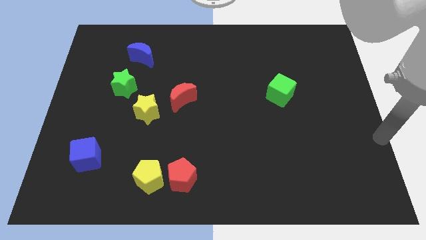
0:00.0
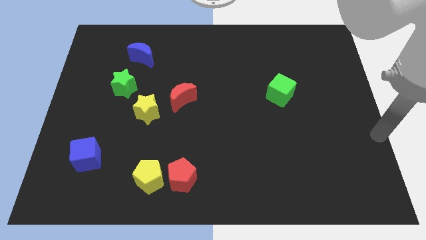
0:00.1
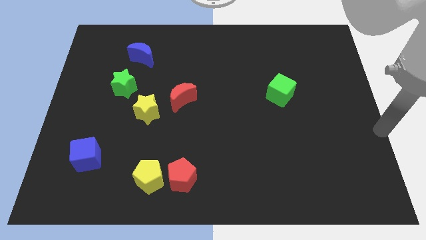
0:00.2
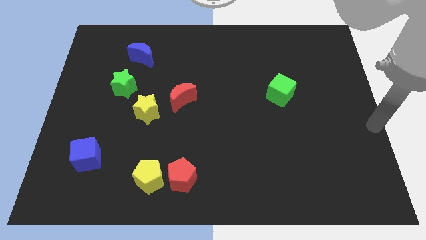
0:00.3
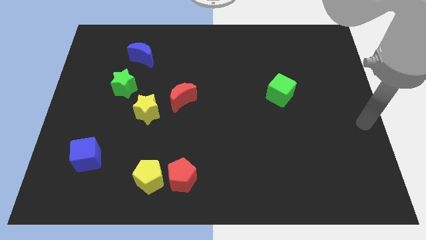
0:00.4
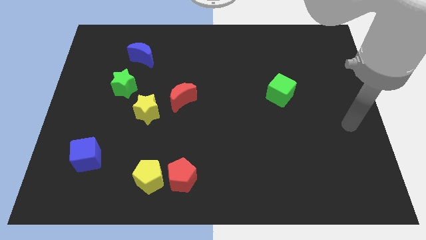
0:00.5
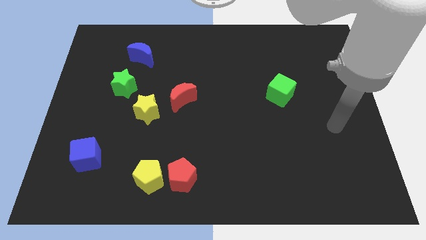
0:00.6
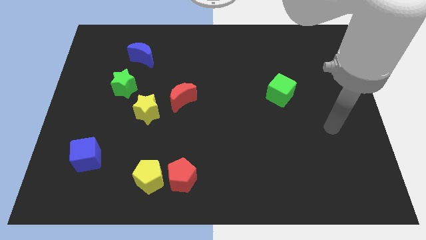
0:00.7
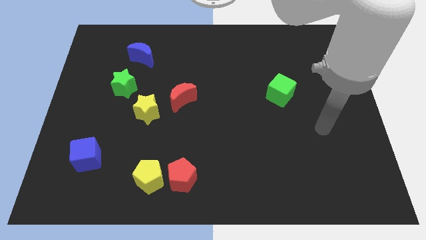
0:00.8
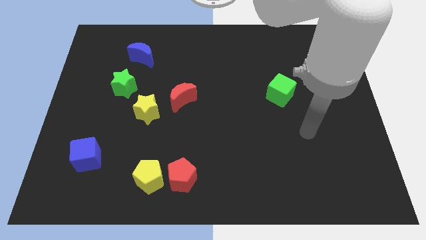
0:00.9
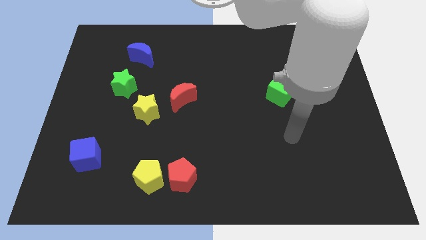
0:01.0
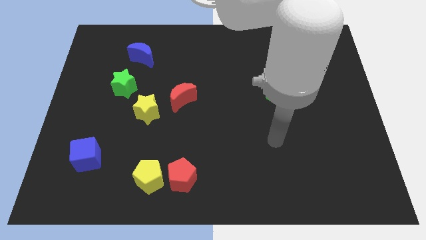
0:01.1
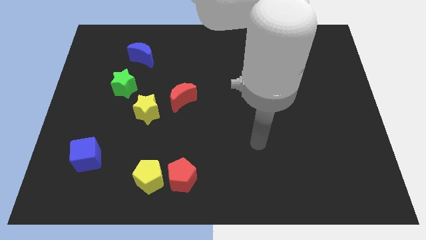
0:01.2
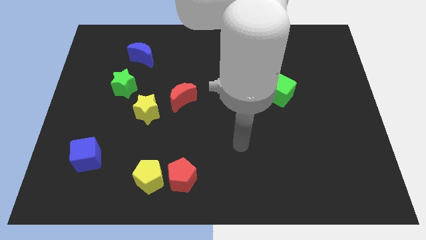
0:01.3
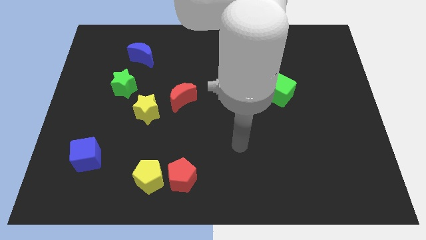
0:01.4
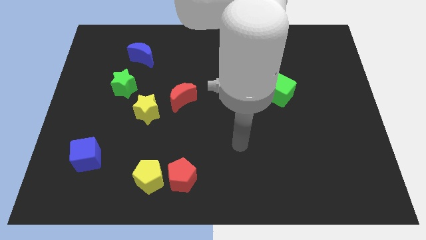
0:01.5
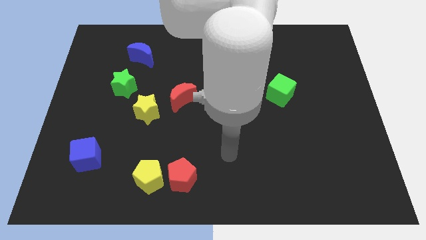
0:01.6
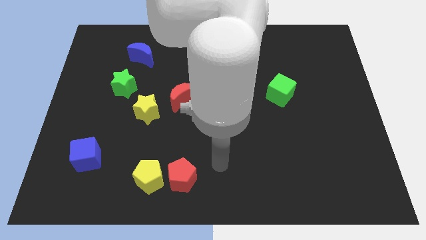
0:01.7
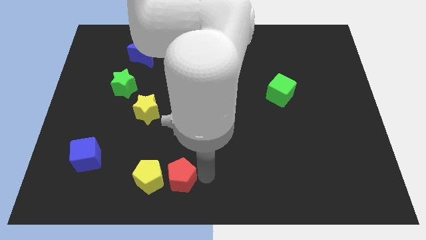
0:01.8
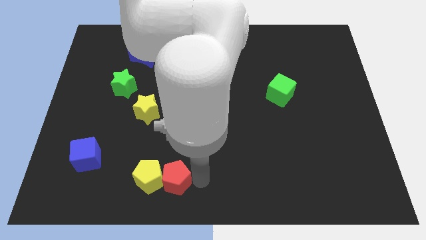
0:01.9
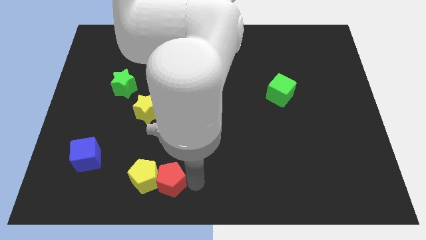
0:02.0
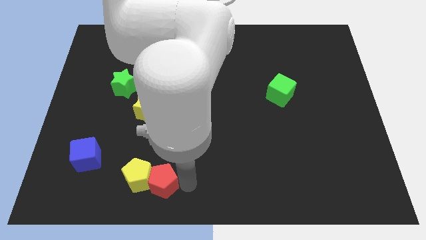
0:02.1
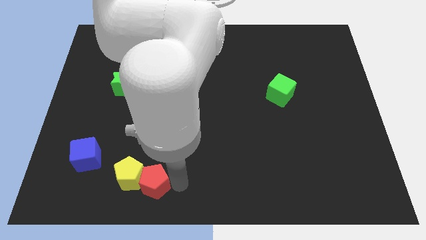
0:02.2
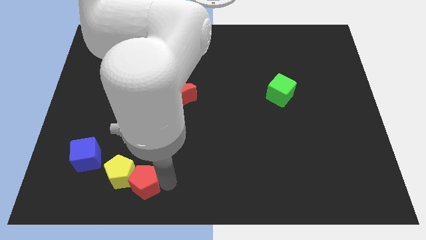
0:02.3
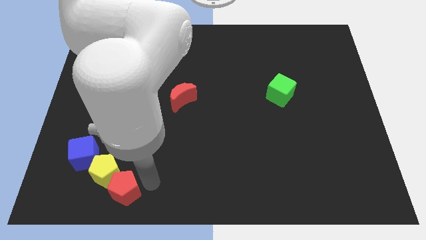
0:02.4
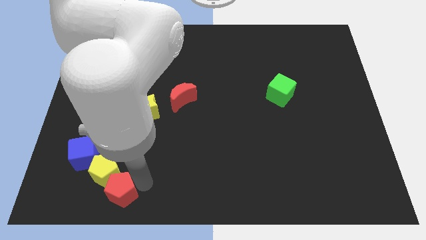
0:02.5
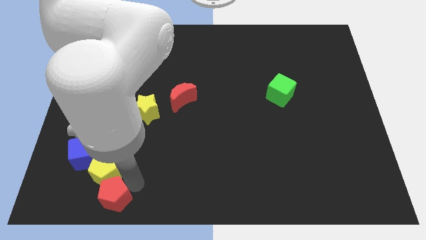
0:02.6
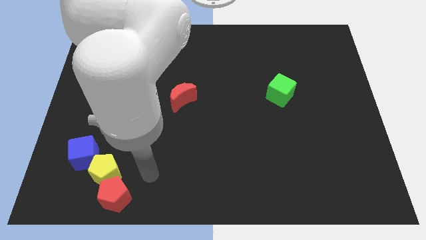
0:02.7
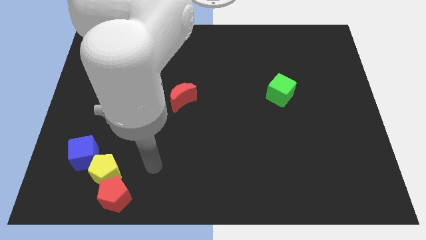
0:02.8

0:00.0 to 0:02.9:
push red pentagon into the yellow pentagon

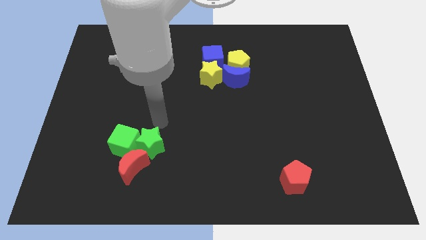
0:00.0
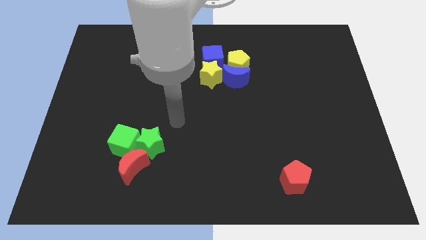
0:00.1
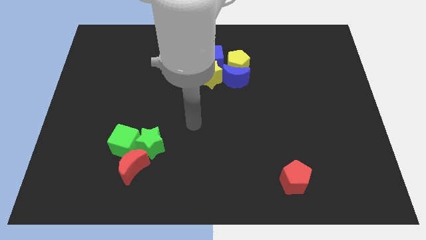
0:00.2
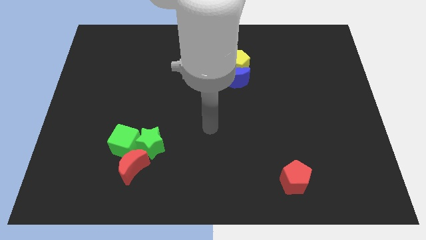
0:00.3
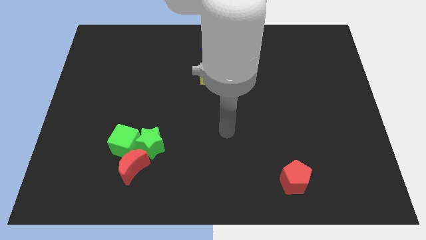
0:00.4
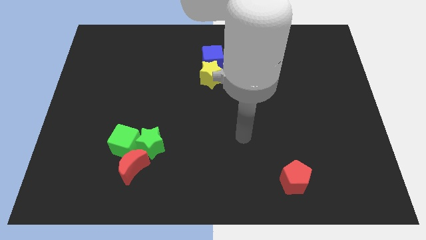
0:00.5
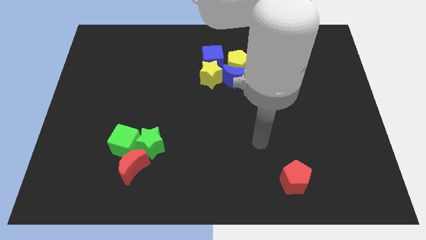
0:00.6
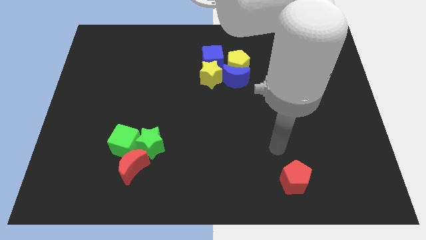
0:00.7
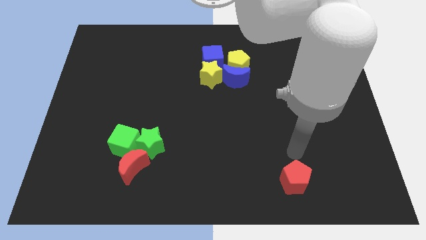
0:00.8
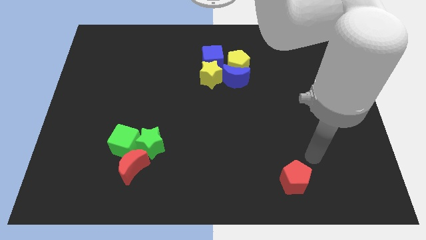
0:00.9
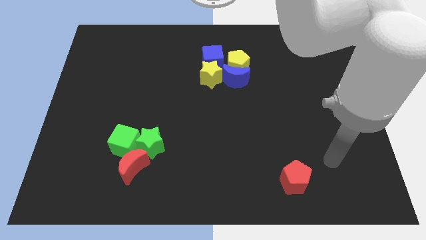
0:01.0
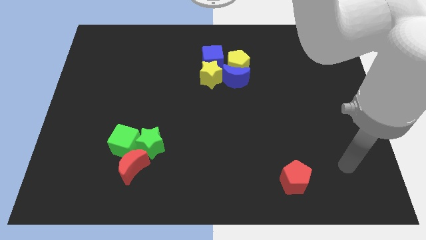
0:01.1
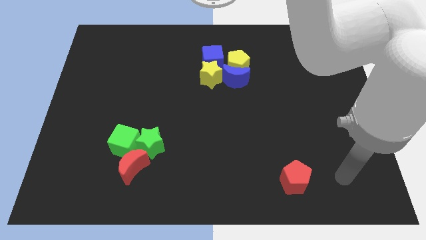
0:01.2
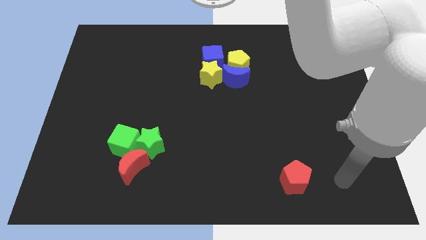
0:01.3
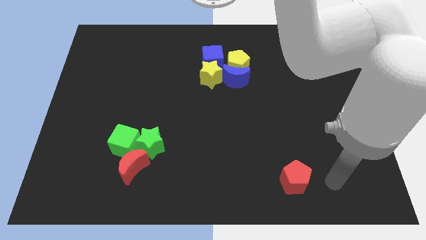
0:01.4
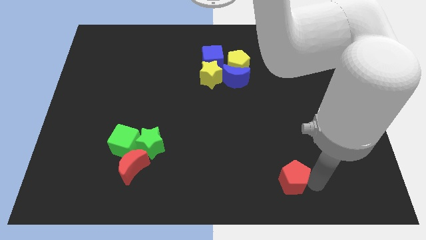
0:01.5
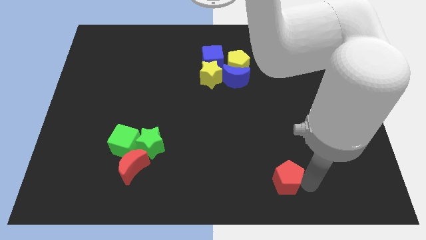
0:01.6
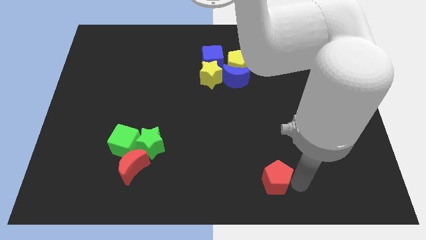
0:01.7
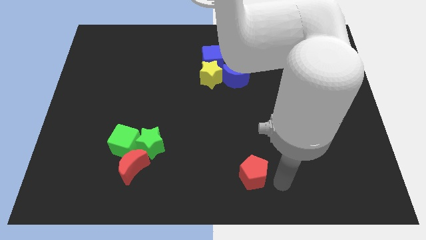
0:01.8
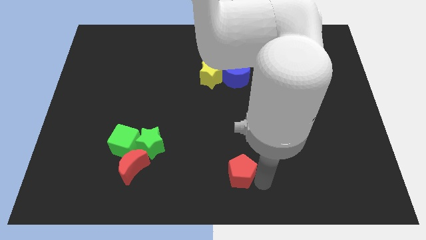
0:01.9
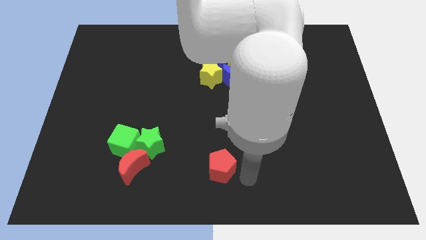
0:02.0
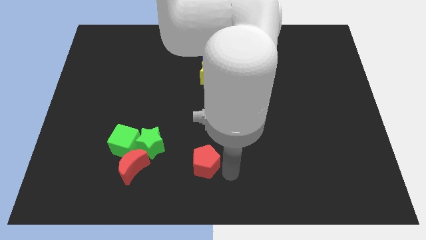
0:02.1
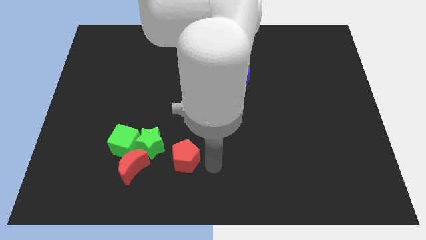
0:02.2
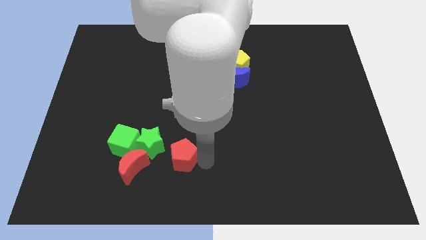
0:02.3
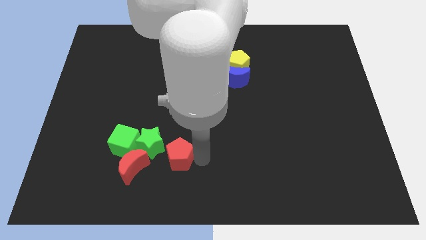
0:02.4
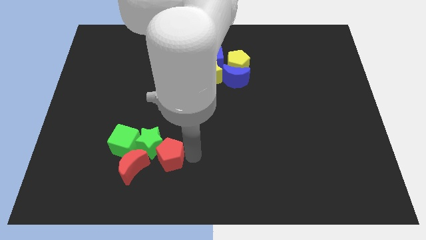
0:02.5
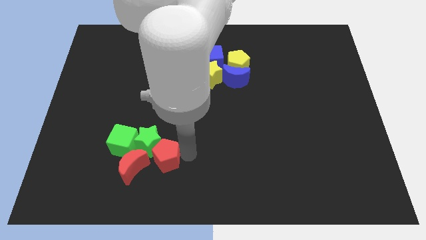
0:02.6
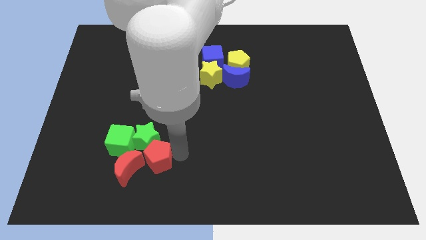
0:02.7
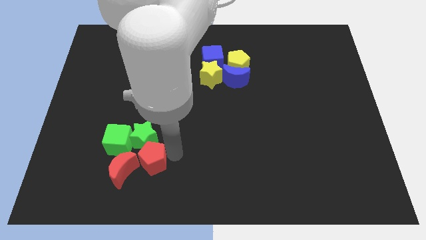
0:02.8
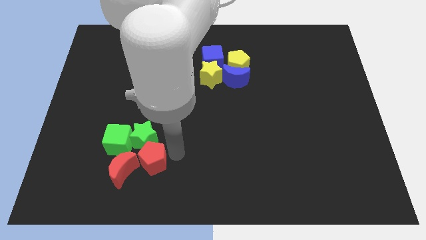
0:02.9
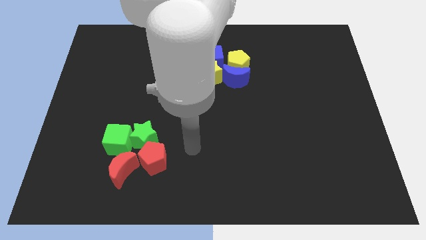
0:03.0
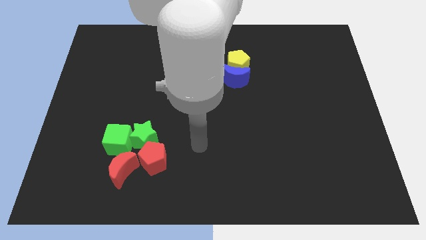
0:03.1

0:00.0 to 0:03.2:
push the red pentagon into the group of blocks

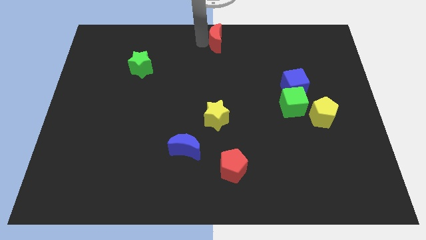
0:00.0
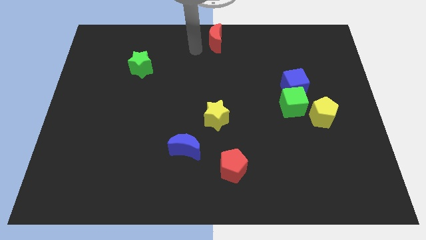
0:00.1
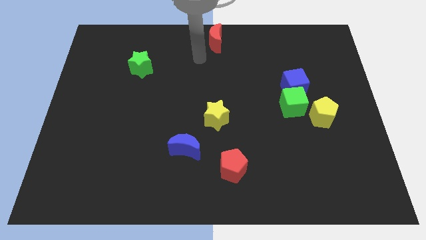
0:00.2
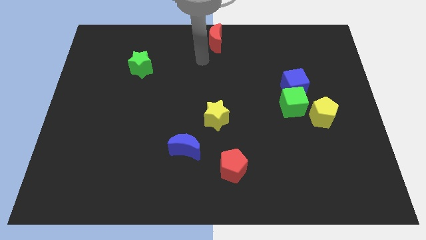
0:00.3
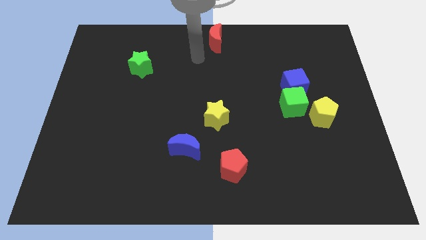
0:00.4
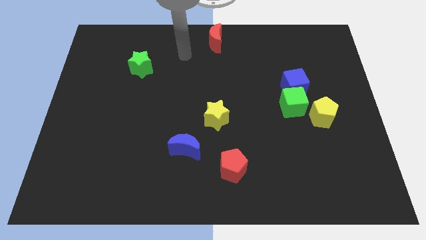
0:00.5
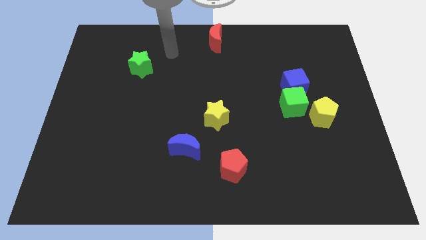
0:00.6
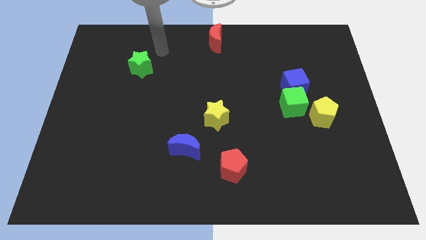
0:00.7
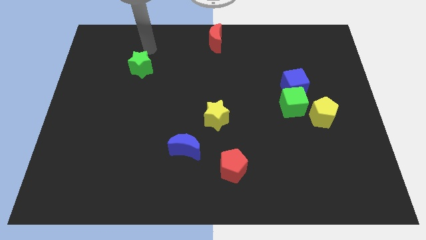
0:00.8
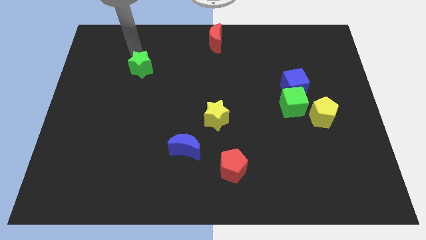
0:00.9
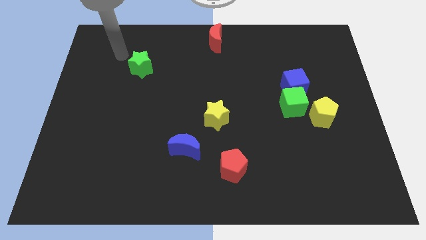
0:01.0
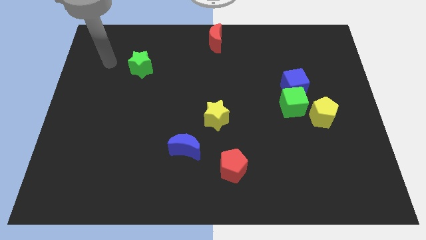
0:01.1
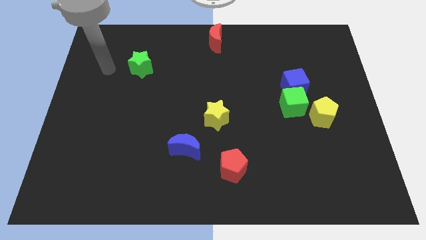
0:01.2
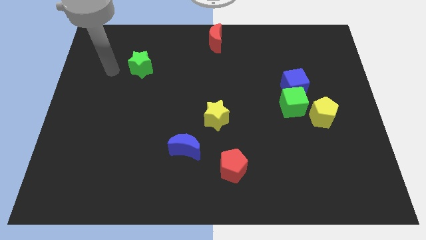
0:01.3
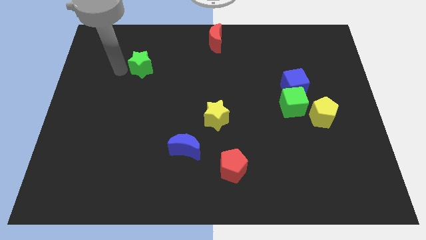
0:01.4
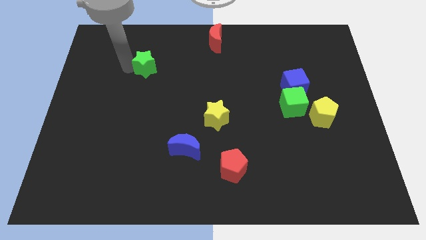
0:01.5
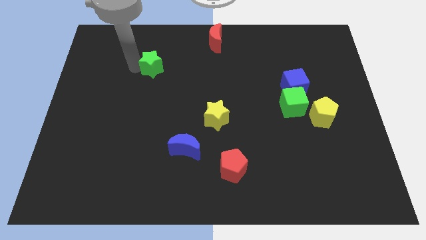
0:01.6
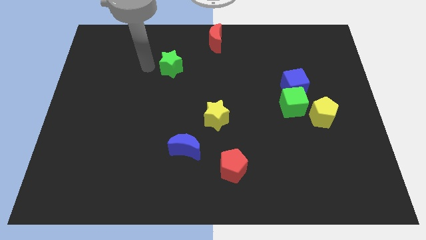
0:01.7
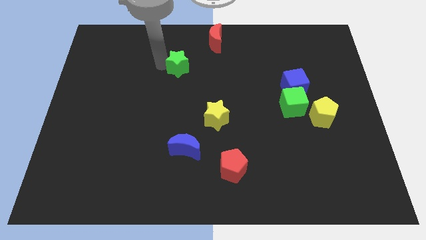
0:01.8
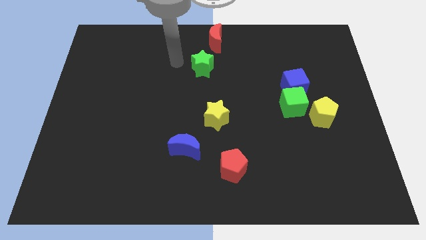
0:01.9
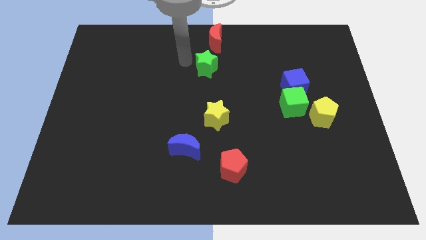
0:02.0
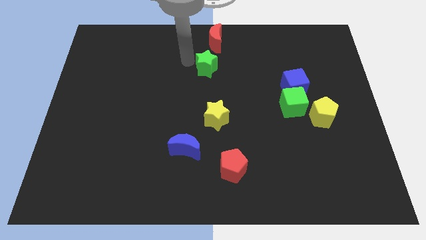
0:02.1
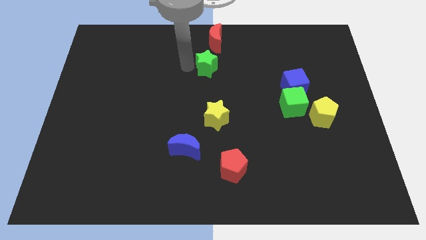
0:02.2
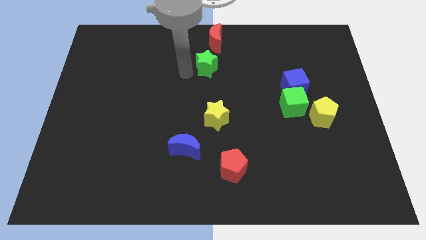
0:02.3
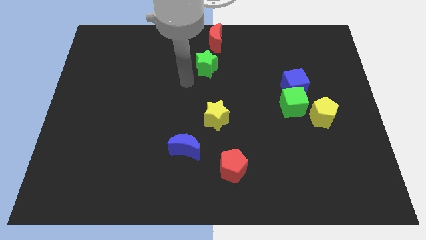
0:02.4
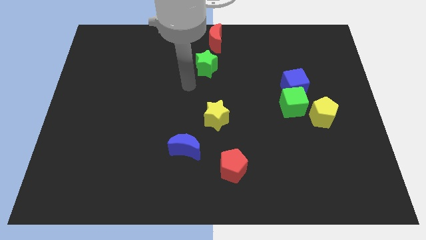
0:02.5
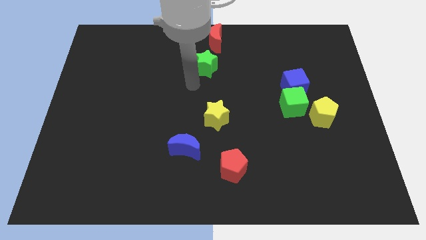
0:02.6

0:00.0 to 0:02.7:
move the green star towards the right side

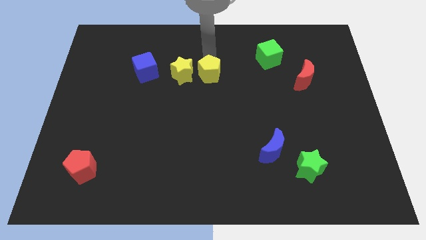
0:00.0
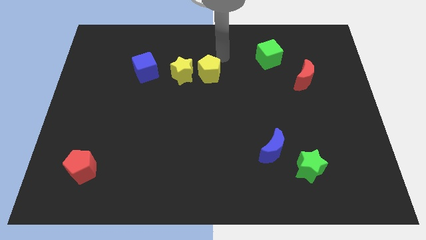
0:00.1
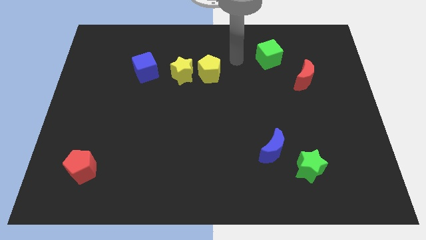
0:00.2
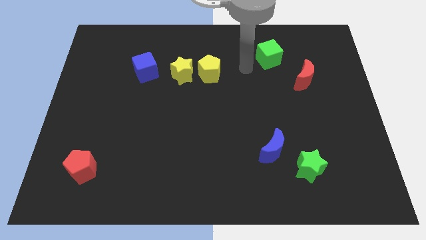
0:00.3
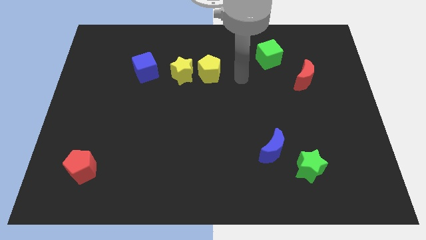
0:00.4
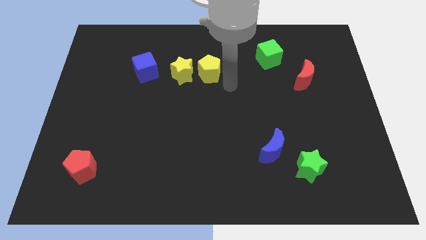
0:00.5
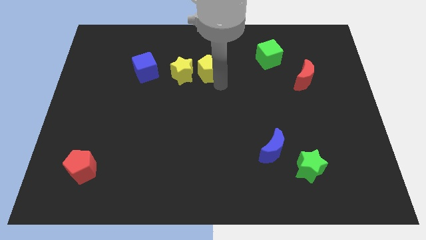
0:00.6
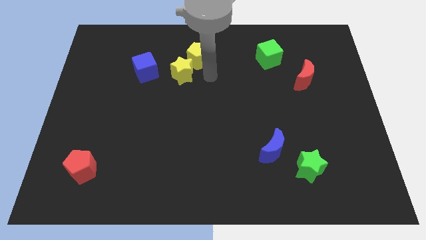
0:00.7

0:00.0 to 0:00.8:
move your arm to the bottom of the yellow pentagon
